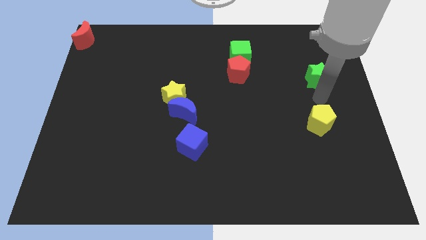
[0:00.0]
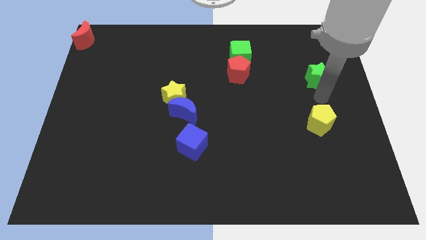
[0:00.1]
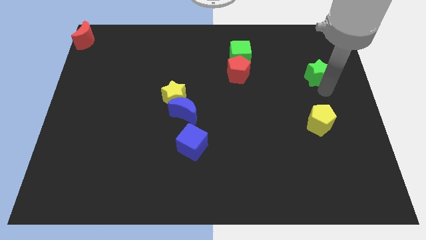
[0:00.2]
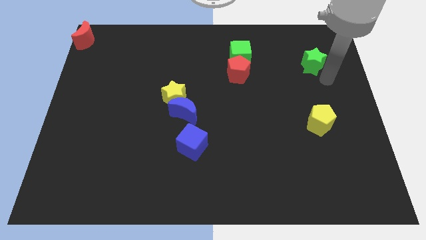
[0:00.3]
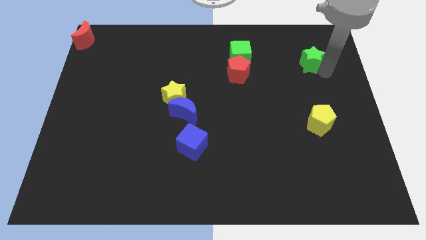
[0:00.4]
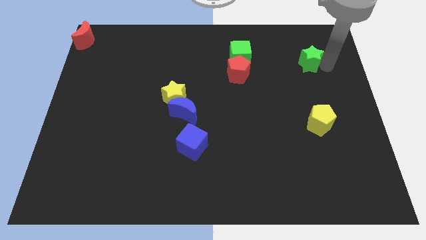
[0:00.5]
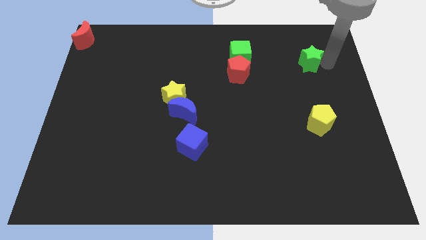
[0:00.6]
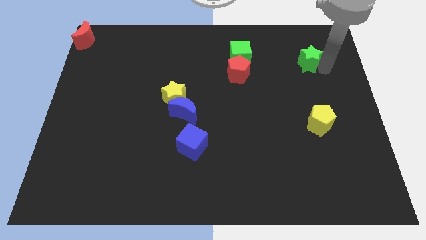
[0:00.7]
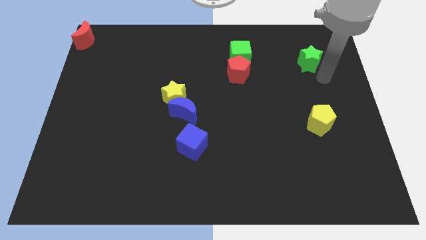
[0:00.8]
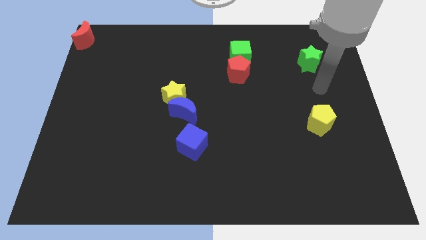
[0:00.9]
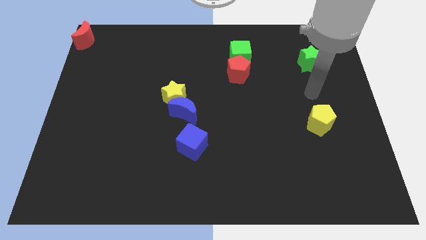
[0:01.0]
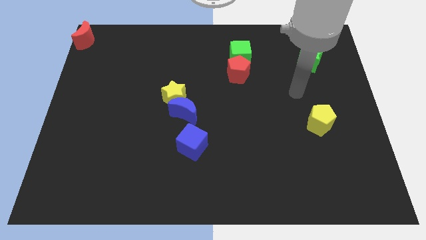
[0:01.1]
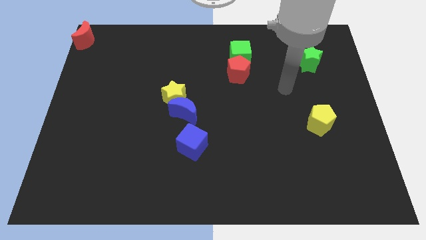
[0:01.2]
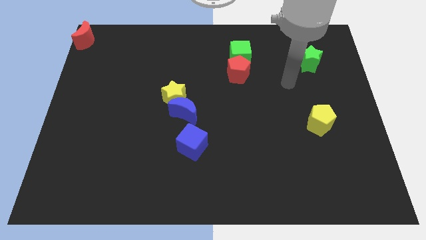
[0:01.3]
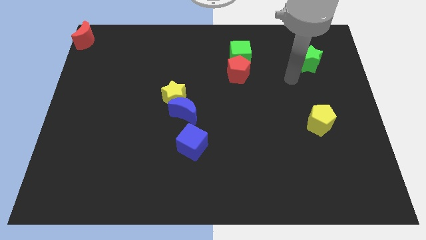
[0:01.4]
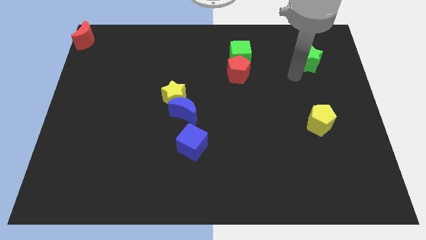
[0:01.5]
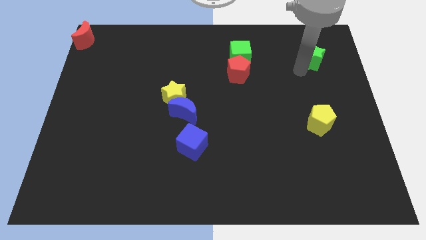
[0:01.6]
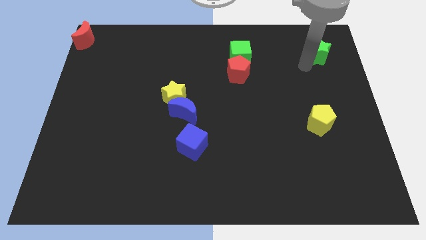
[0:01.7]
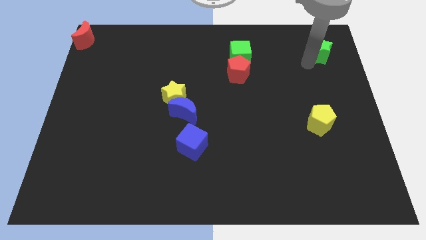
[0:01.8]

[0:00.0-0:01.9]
place the green star parallel to green cube

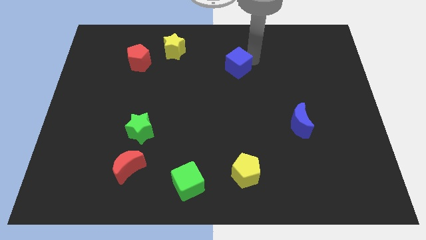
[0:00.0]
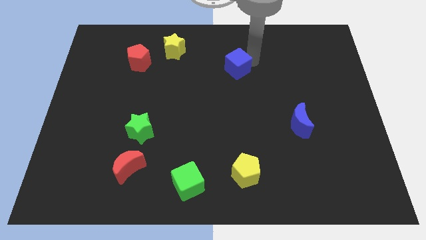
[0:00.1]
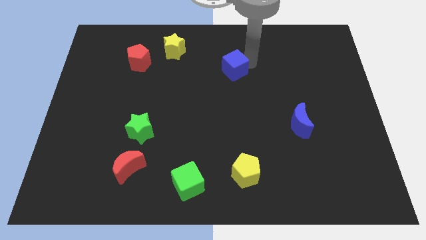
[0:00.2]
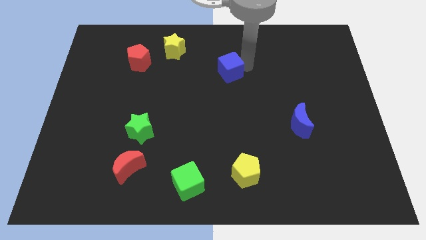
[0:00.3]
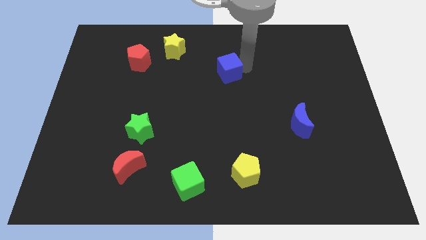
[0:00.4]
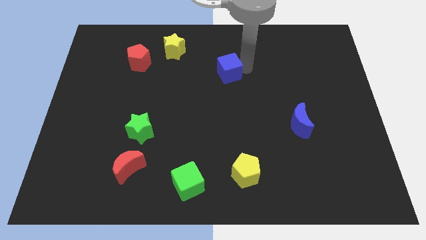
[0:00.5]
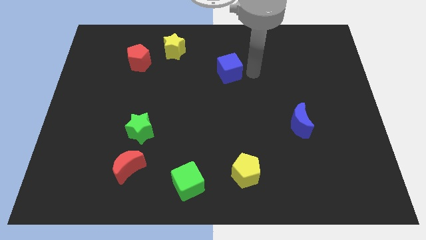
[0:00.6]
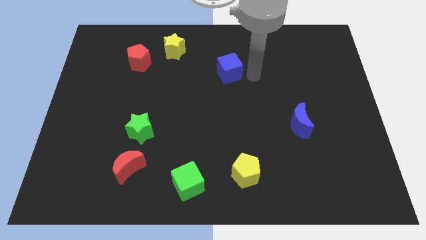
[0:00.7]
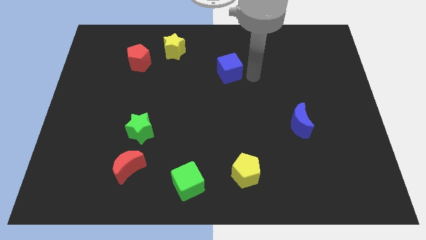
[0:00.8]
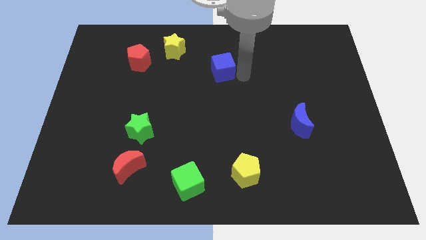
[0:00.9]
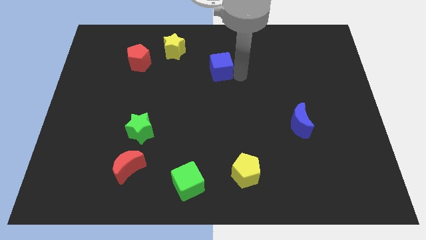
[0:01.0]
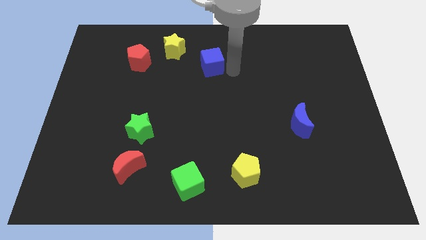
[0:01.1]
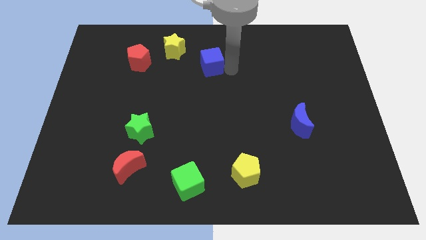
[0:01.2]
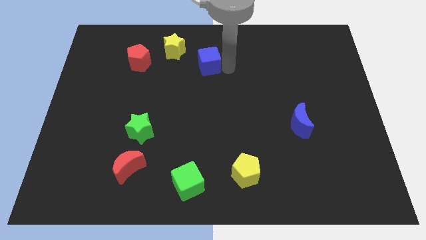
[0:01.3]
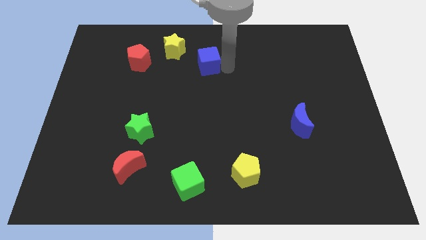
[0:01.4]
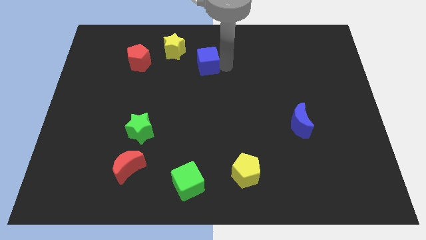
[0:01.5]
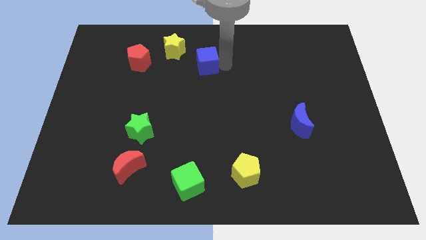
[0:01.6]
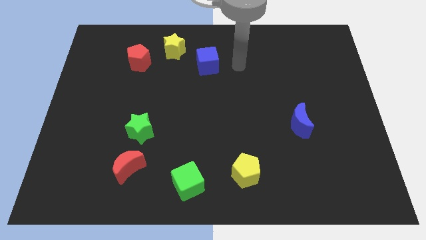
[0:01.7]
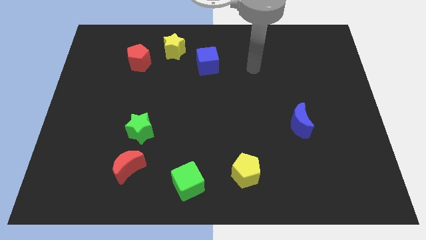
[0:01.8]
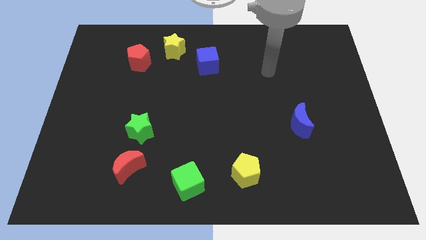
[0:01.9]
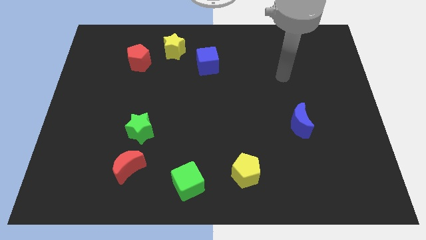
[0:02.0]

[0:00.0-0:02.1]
place the blue cube diagonally to yellow star

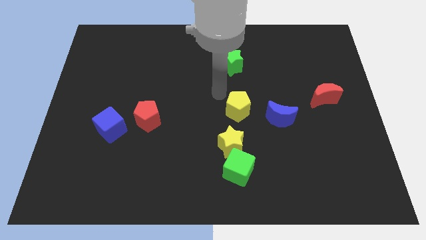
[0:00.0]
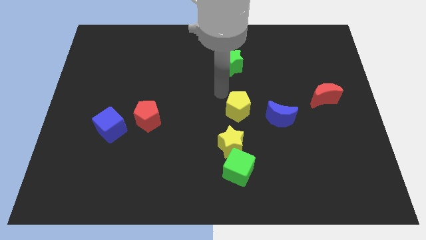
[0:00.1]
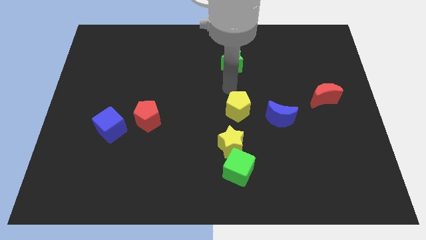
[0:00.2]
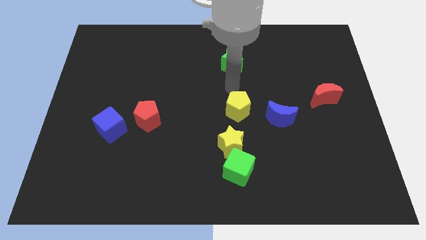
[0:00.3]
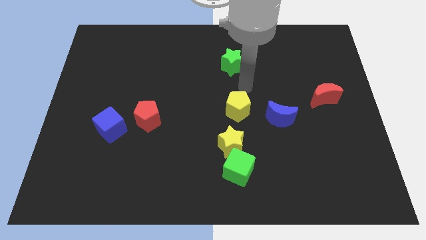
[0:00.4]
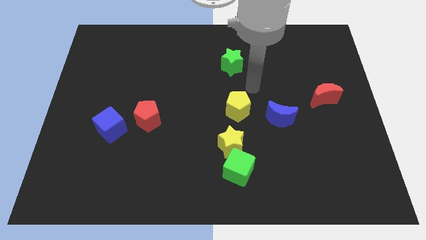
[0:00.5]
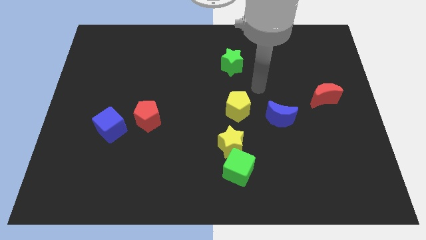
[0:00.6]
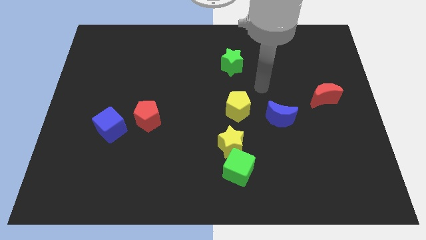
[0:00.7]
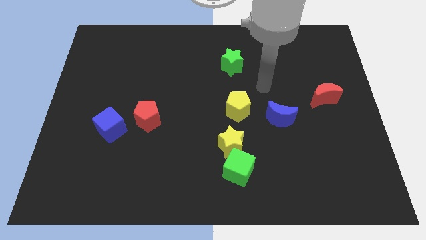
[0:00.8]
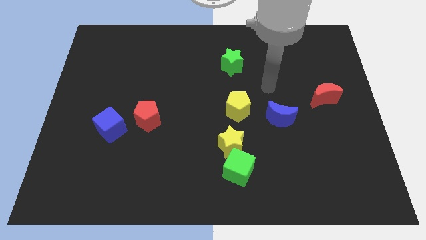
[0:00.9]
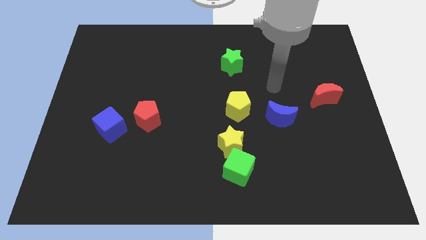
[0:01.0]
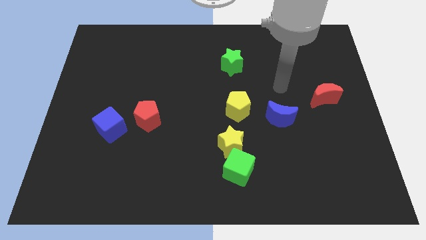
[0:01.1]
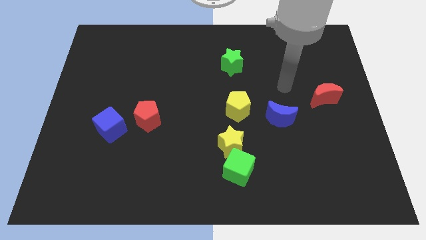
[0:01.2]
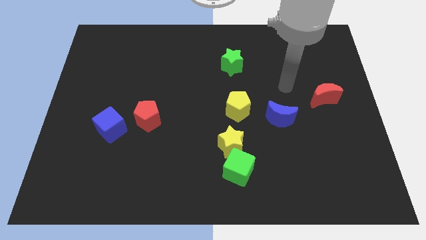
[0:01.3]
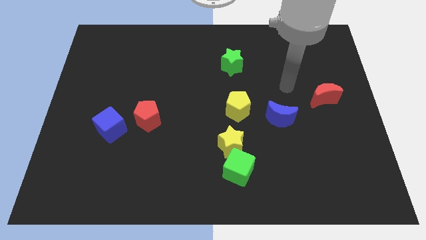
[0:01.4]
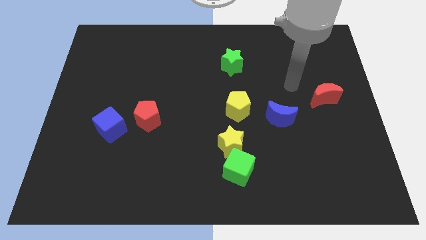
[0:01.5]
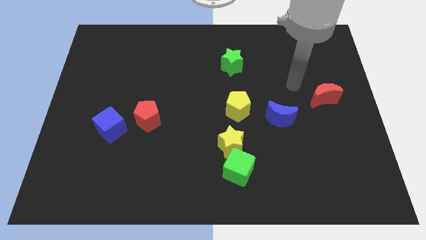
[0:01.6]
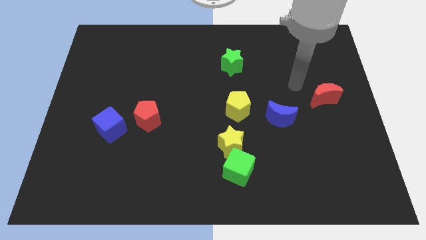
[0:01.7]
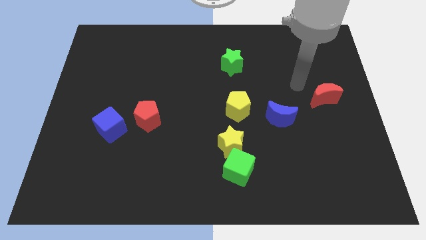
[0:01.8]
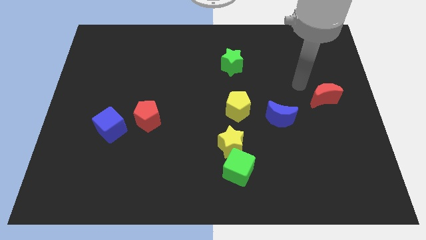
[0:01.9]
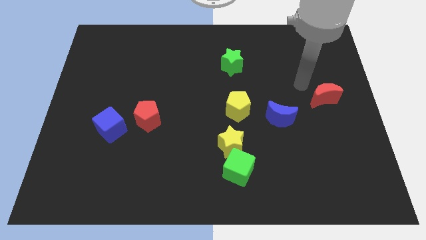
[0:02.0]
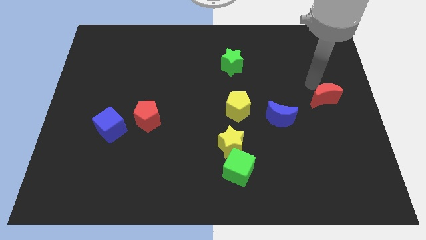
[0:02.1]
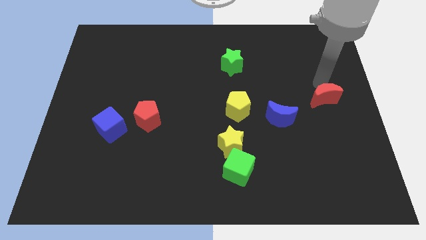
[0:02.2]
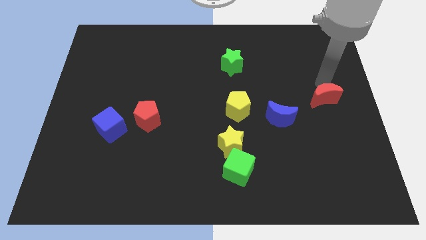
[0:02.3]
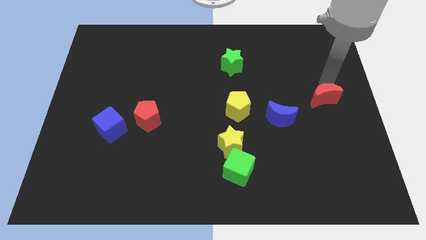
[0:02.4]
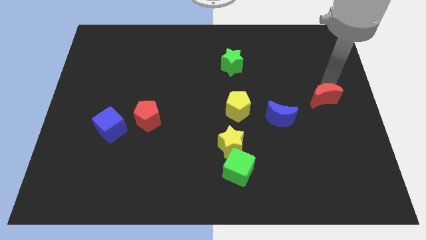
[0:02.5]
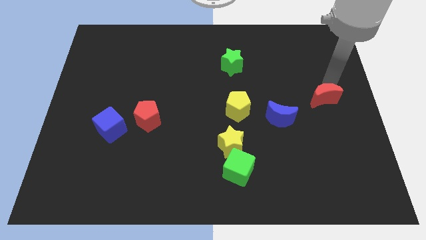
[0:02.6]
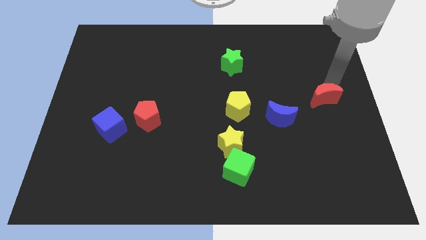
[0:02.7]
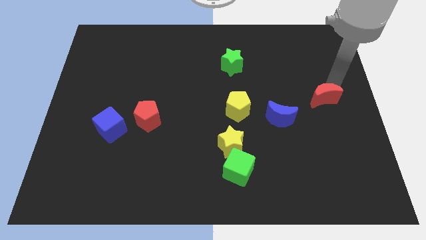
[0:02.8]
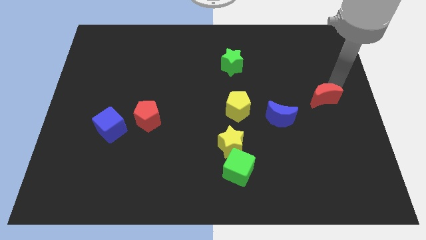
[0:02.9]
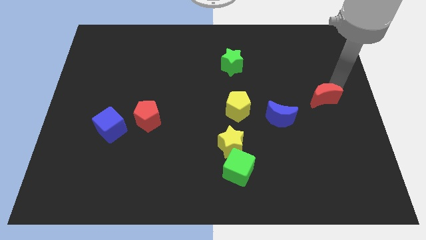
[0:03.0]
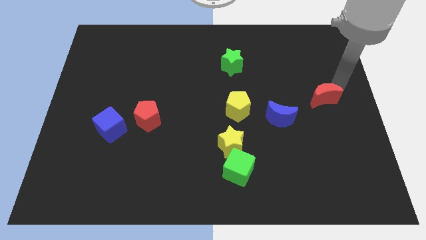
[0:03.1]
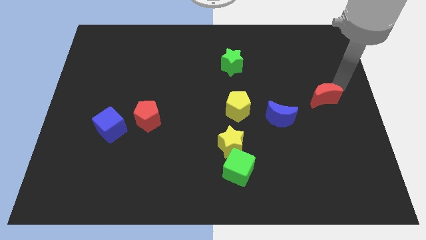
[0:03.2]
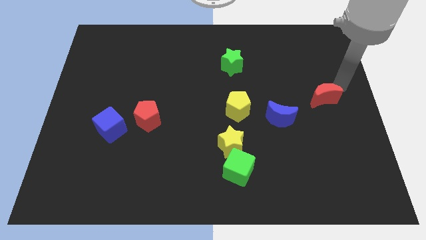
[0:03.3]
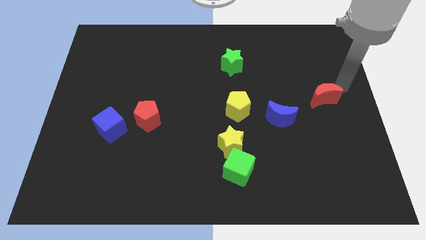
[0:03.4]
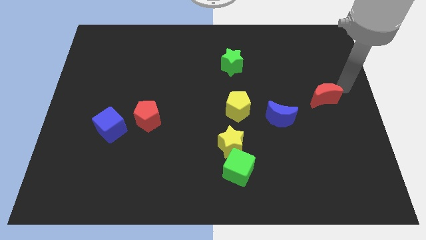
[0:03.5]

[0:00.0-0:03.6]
point your arm at the top right side of the red crescent

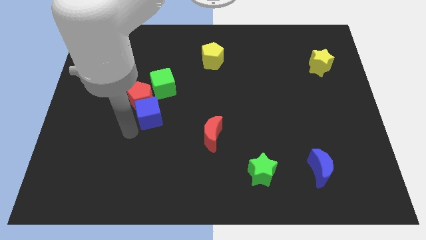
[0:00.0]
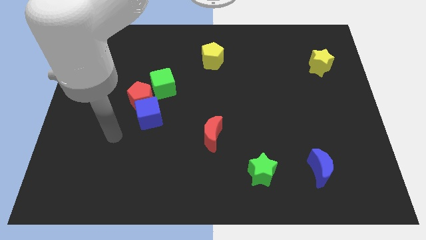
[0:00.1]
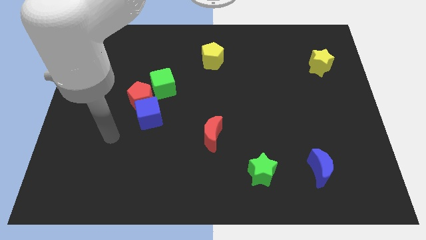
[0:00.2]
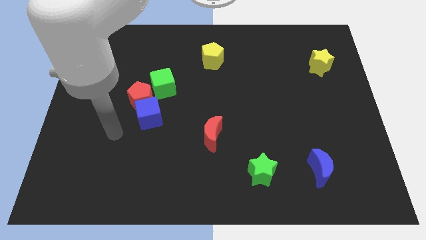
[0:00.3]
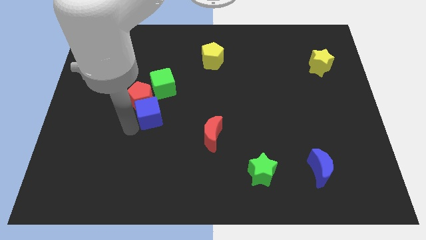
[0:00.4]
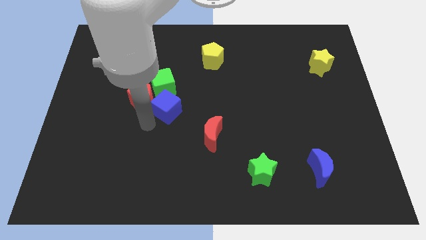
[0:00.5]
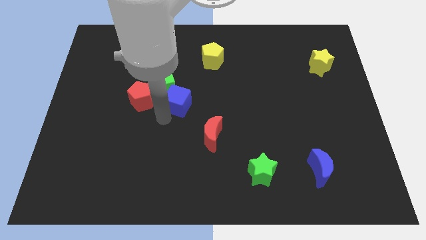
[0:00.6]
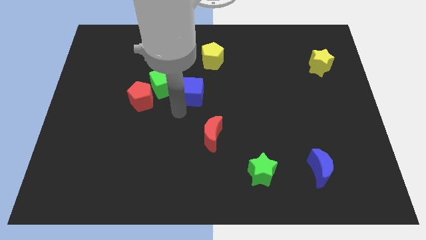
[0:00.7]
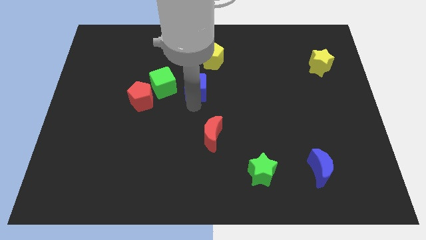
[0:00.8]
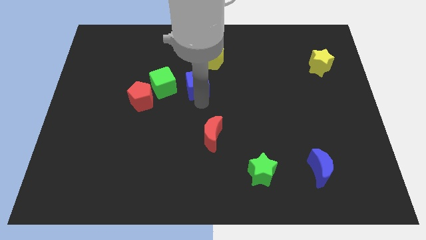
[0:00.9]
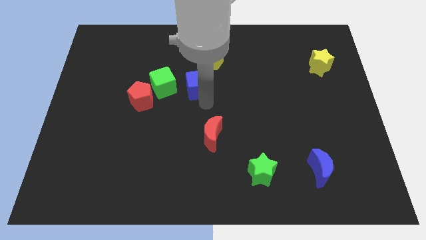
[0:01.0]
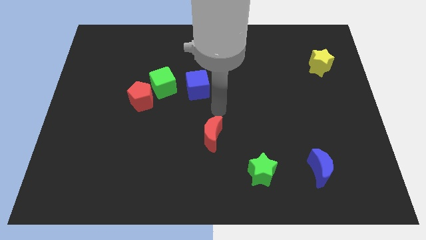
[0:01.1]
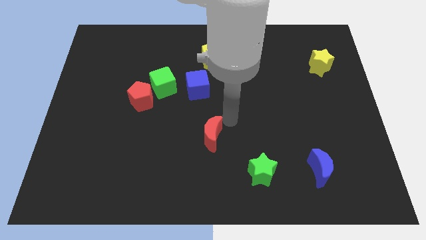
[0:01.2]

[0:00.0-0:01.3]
put the blue cube at the bottom left of the yellow pentagon
